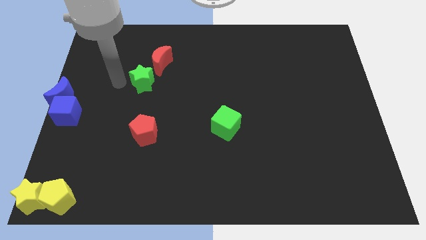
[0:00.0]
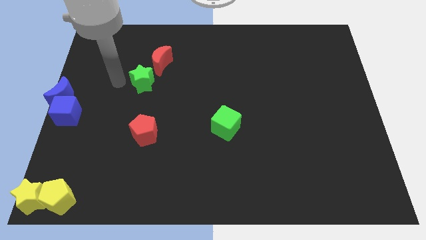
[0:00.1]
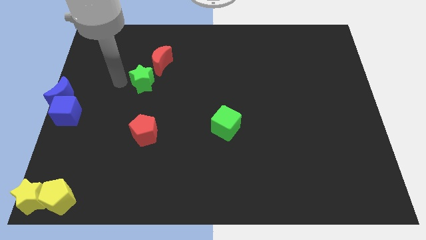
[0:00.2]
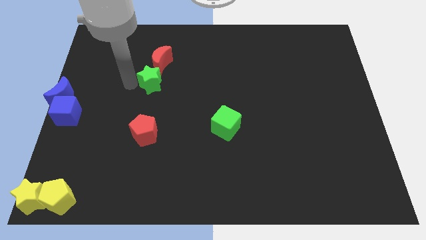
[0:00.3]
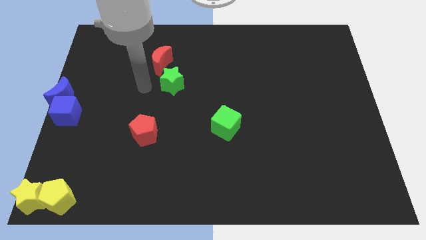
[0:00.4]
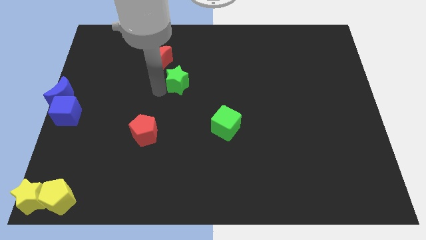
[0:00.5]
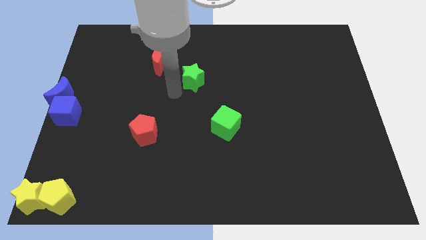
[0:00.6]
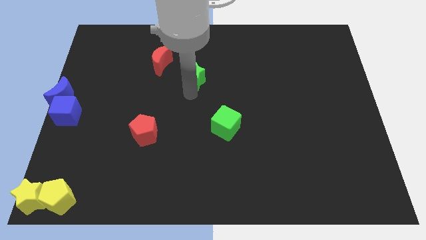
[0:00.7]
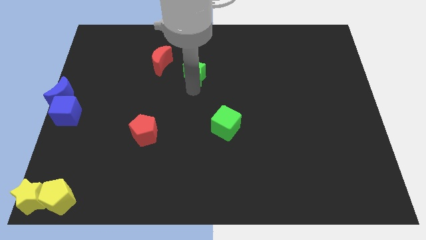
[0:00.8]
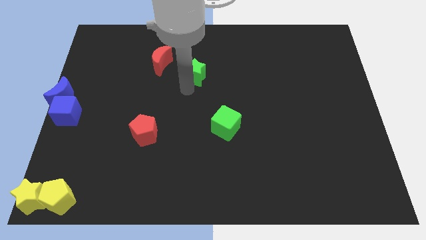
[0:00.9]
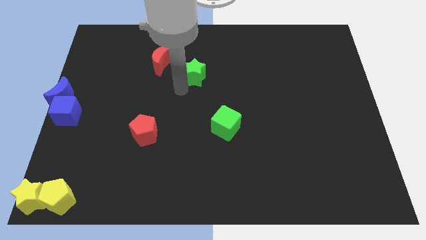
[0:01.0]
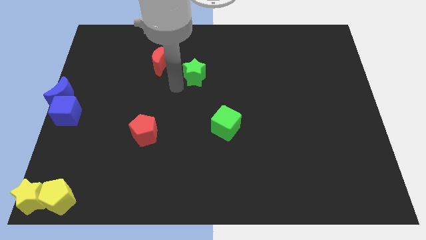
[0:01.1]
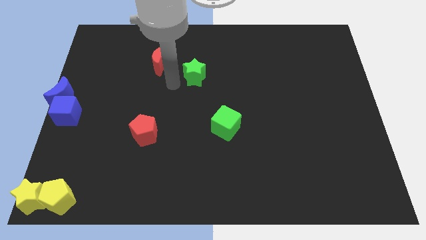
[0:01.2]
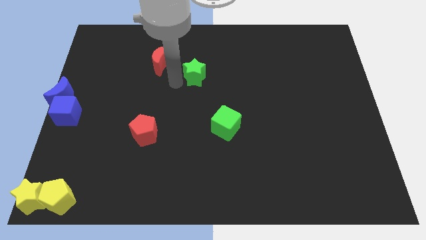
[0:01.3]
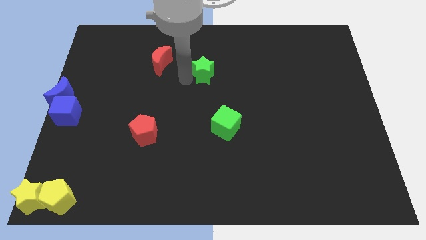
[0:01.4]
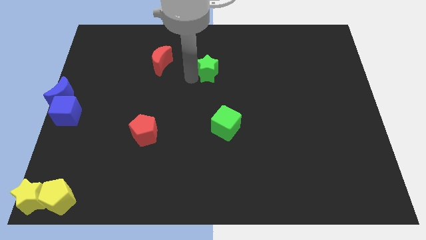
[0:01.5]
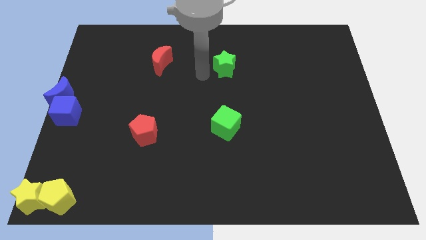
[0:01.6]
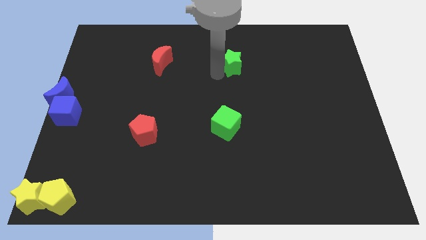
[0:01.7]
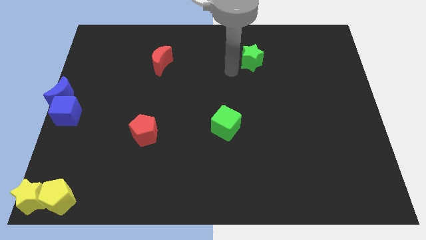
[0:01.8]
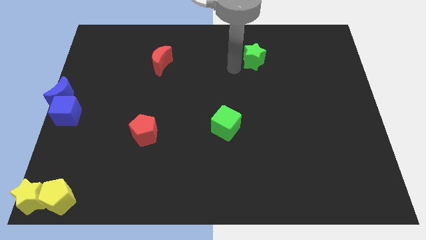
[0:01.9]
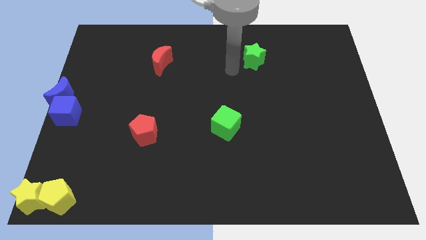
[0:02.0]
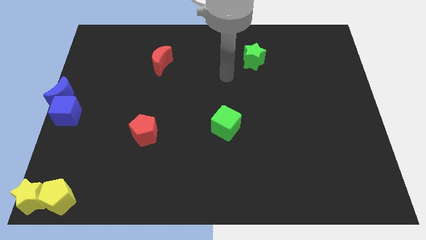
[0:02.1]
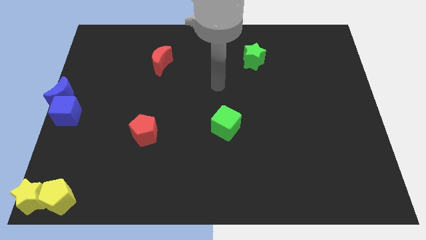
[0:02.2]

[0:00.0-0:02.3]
put the green star parallel to the red crescent

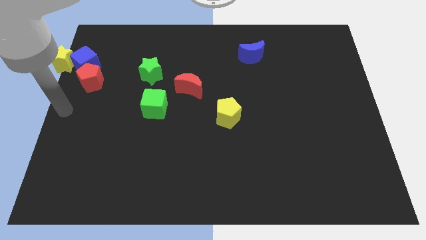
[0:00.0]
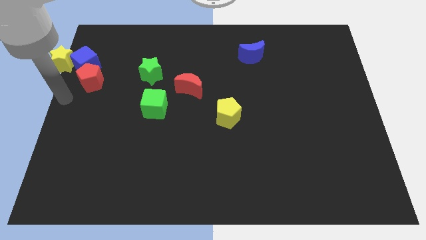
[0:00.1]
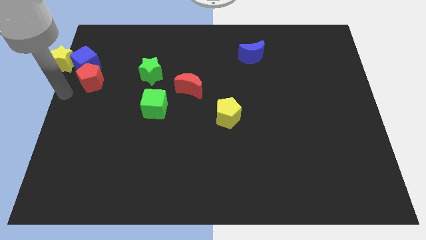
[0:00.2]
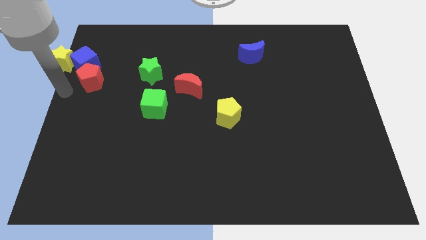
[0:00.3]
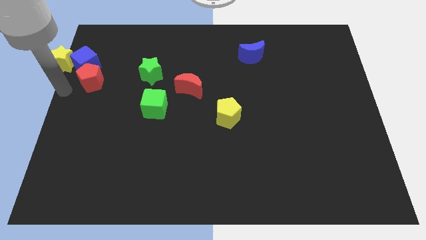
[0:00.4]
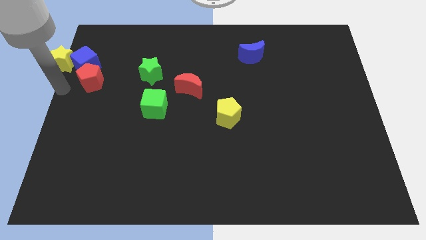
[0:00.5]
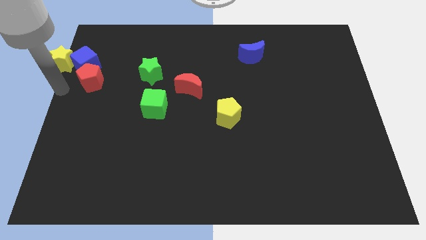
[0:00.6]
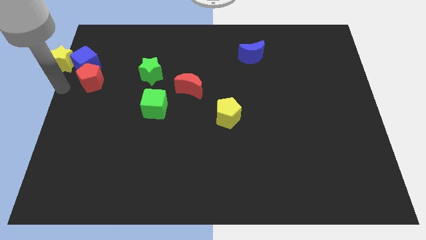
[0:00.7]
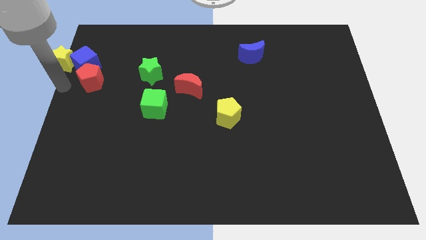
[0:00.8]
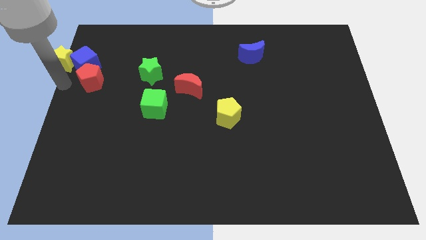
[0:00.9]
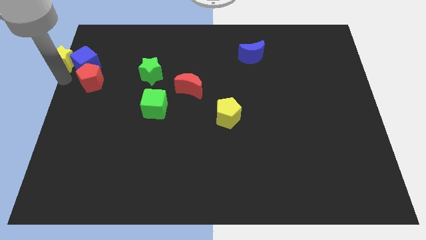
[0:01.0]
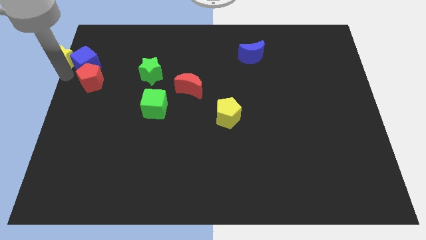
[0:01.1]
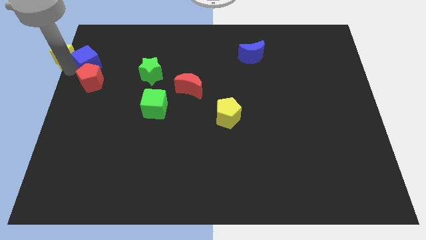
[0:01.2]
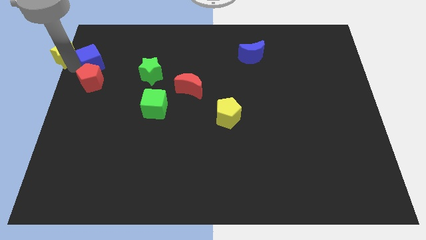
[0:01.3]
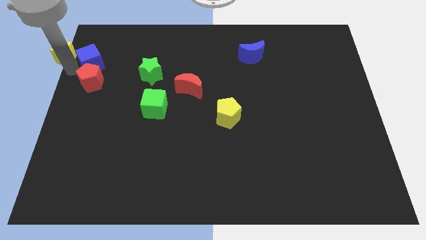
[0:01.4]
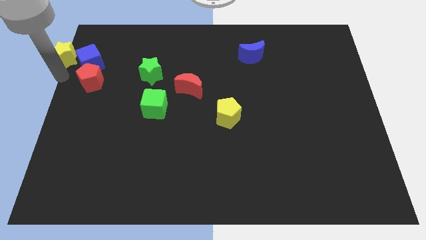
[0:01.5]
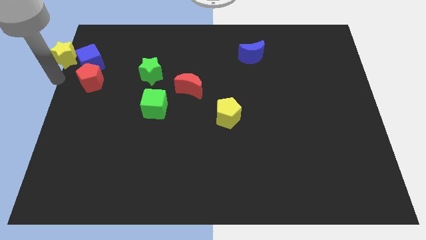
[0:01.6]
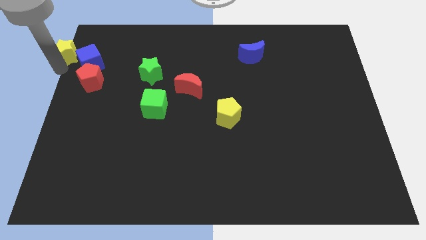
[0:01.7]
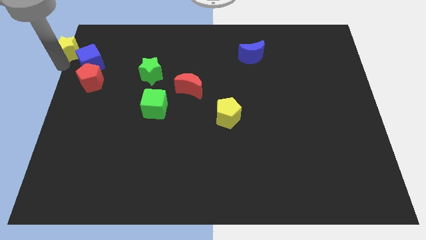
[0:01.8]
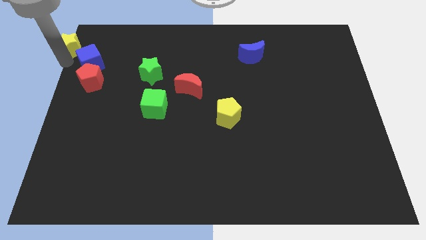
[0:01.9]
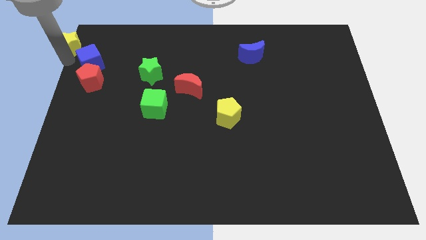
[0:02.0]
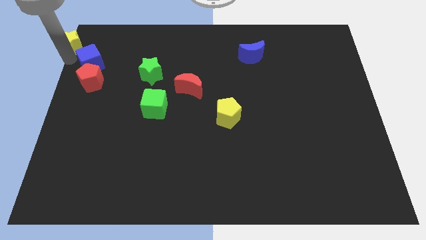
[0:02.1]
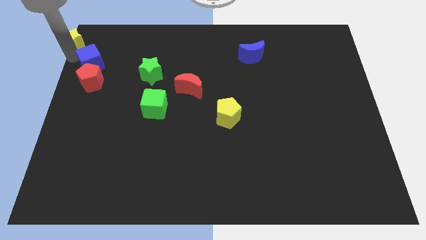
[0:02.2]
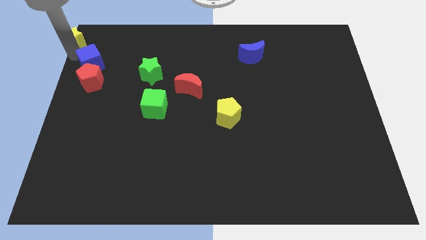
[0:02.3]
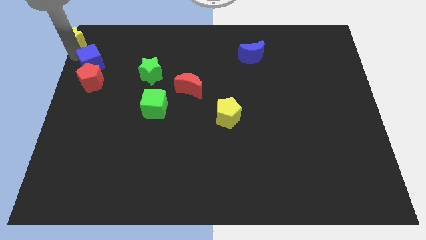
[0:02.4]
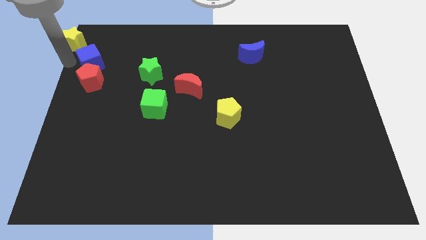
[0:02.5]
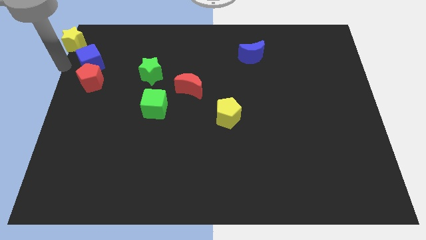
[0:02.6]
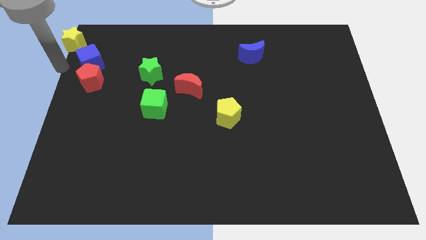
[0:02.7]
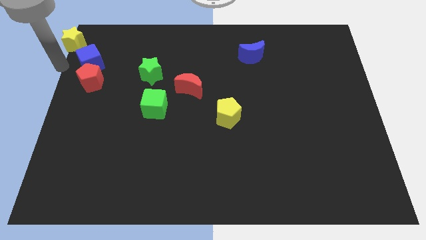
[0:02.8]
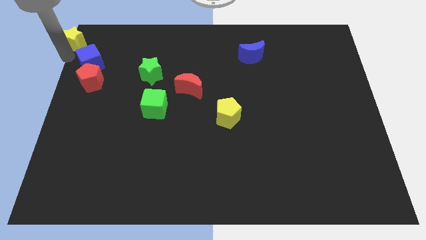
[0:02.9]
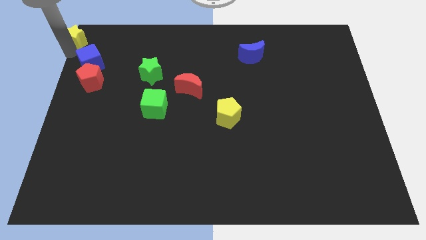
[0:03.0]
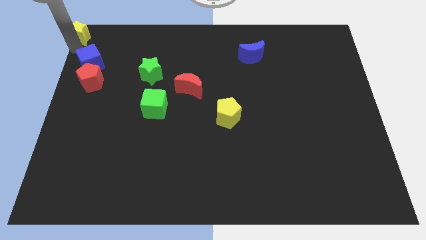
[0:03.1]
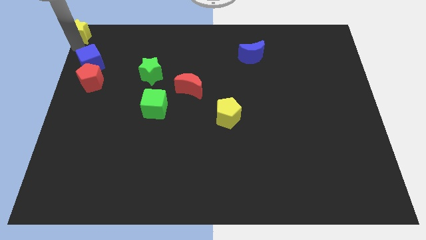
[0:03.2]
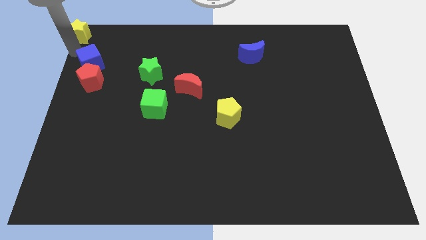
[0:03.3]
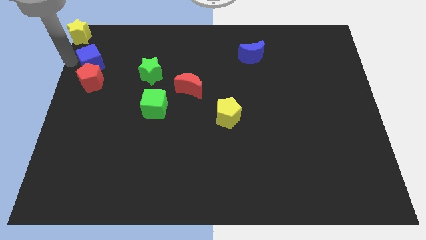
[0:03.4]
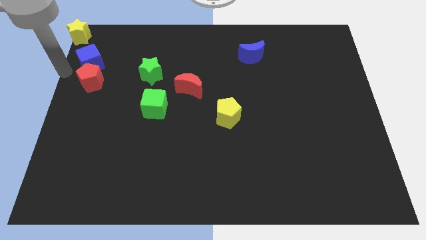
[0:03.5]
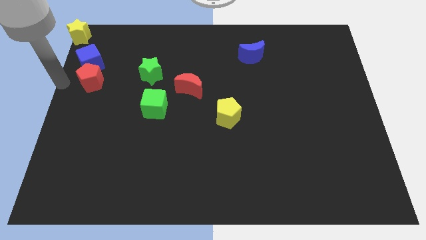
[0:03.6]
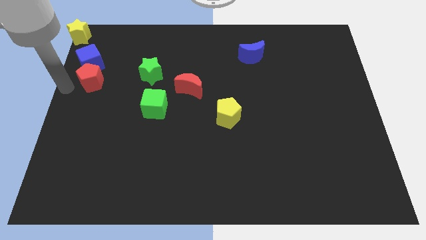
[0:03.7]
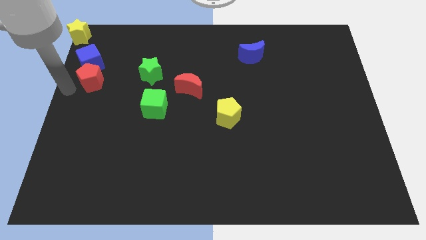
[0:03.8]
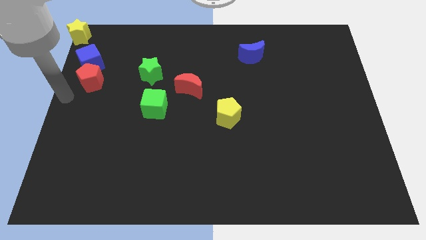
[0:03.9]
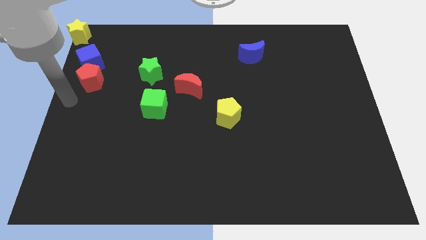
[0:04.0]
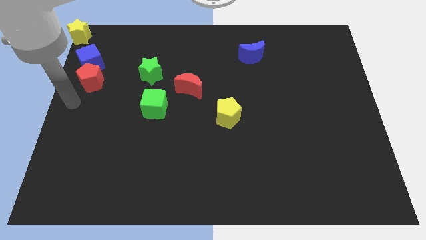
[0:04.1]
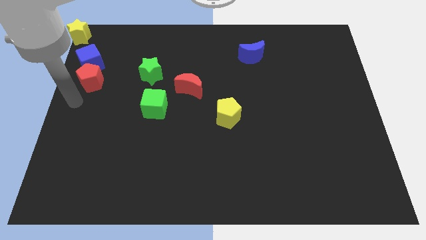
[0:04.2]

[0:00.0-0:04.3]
place yellow star to the top right corner of the board

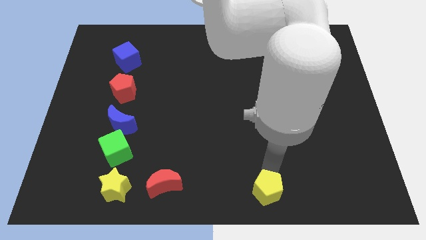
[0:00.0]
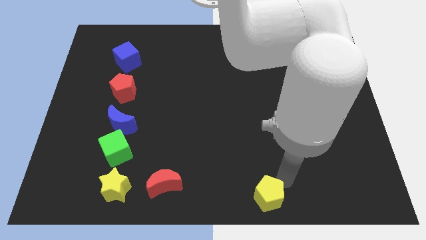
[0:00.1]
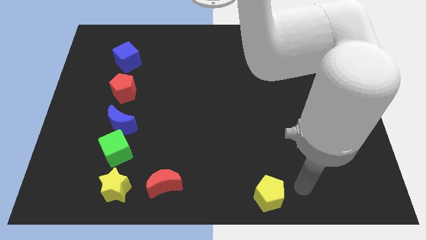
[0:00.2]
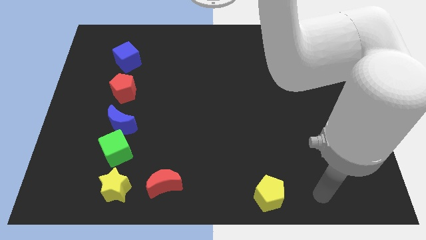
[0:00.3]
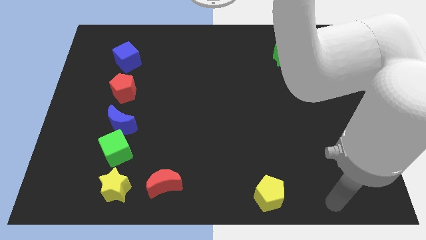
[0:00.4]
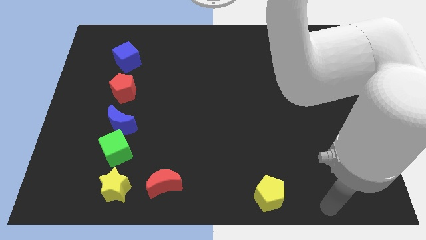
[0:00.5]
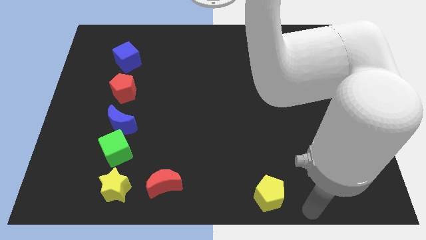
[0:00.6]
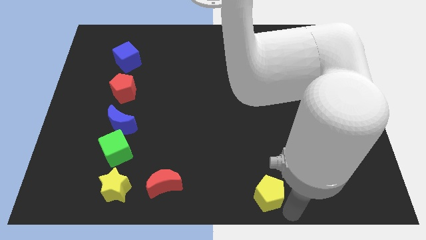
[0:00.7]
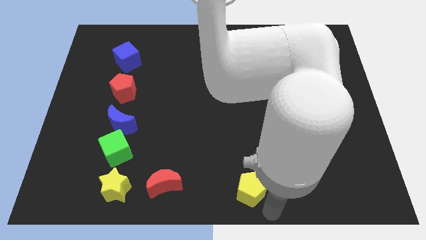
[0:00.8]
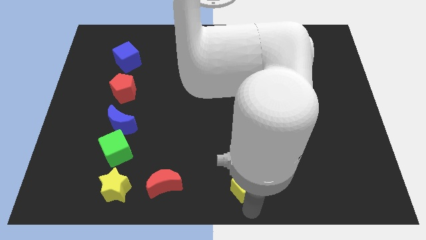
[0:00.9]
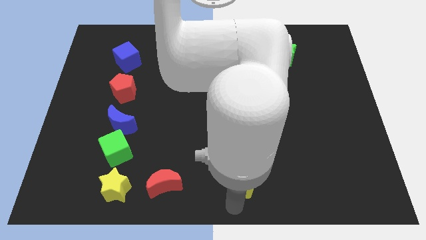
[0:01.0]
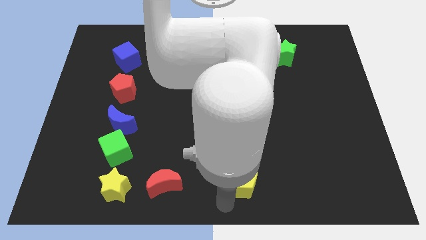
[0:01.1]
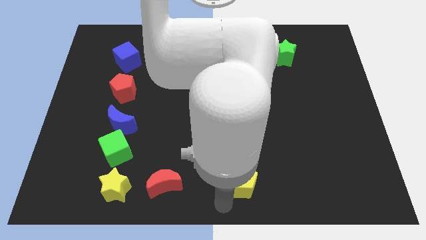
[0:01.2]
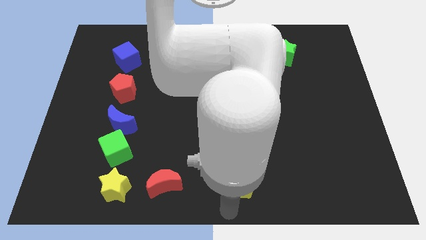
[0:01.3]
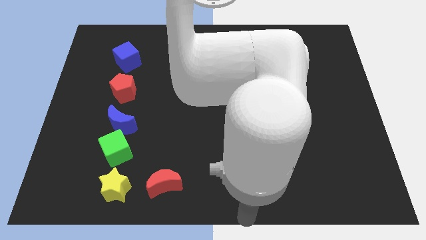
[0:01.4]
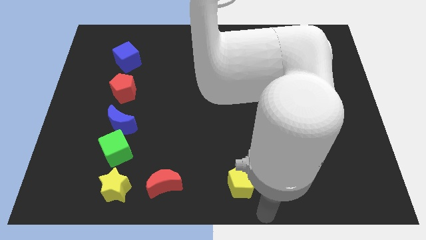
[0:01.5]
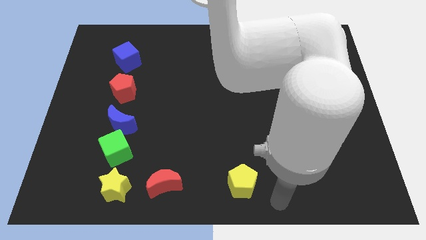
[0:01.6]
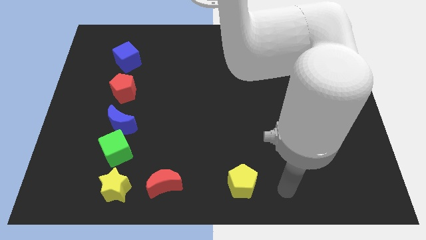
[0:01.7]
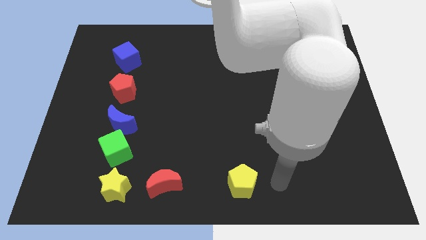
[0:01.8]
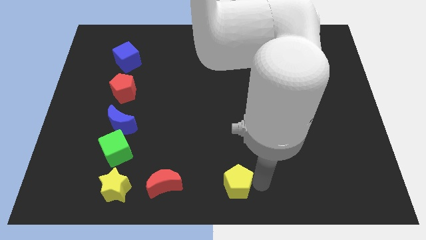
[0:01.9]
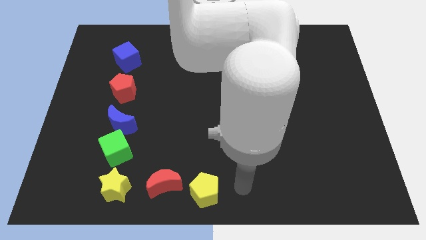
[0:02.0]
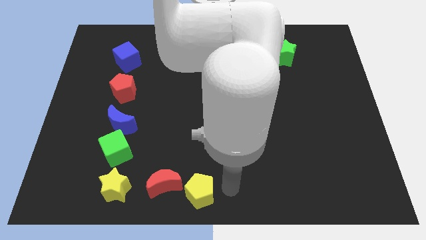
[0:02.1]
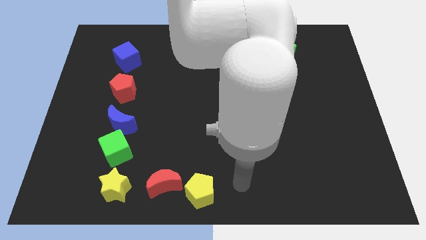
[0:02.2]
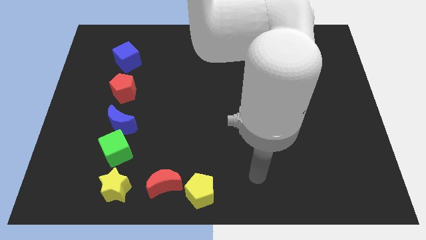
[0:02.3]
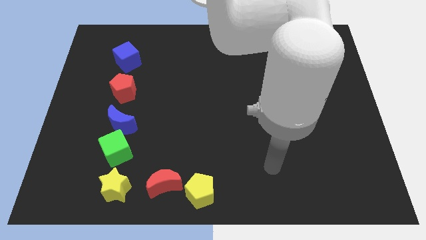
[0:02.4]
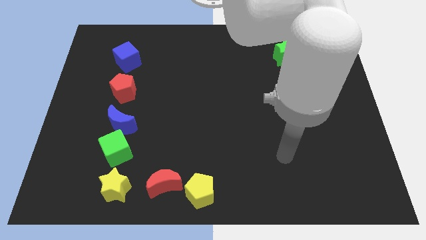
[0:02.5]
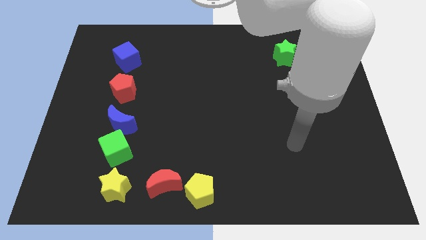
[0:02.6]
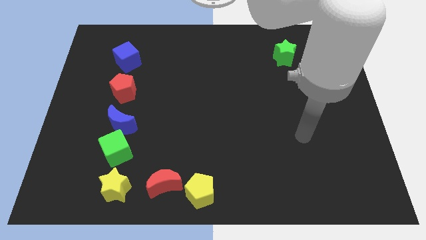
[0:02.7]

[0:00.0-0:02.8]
place the yellow pentagon into red crescent
